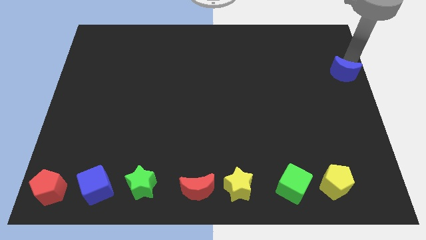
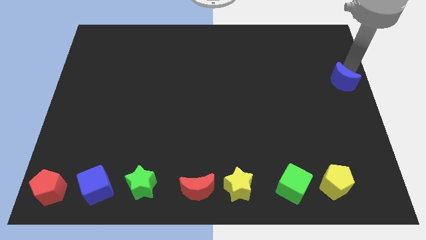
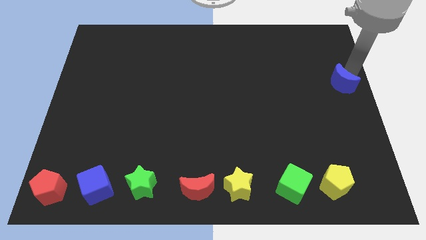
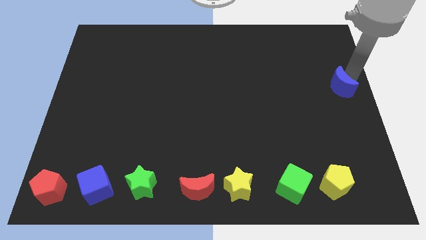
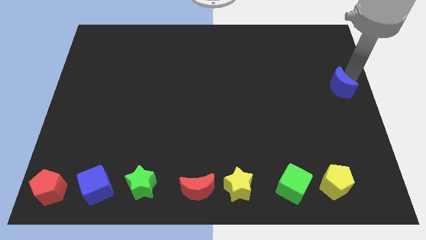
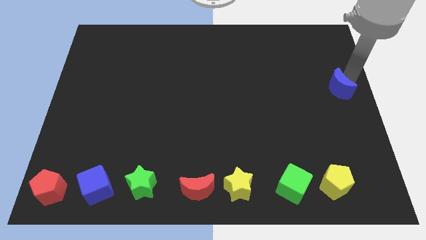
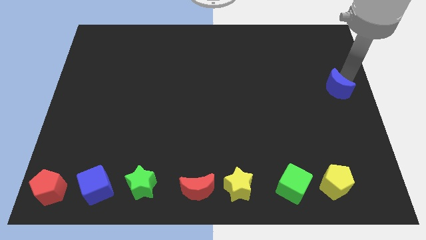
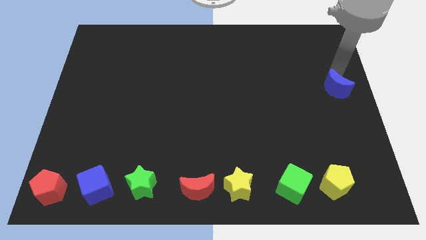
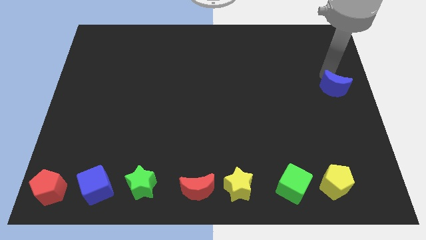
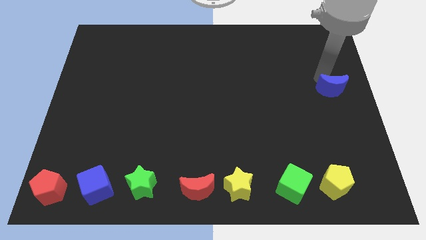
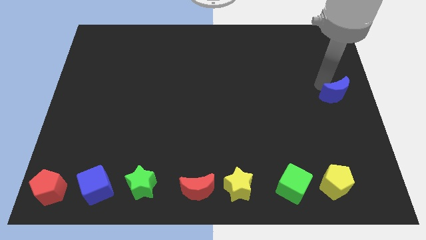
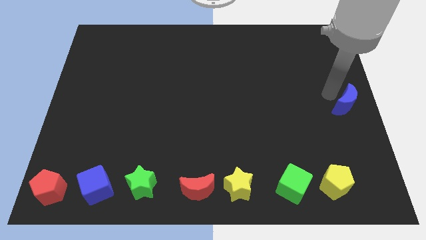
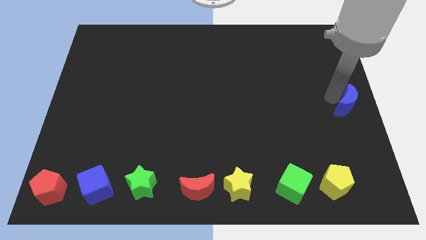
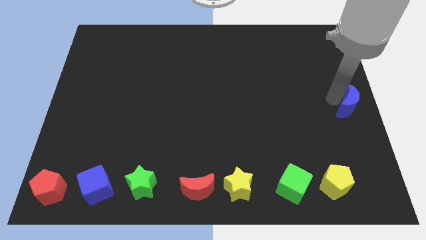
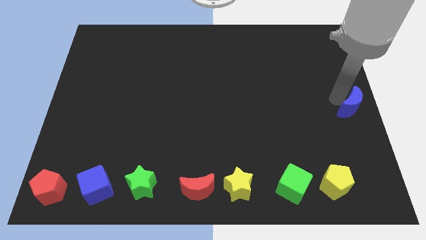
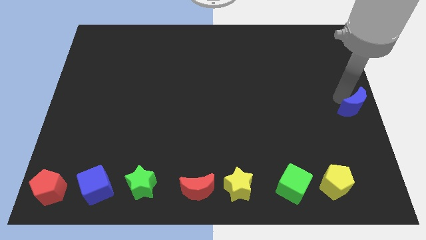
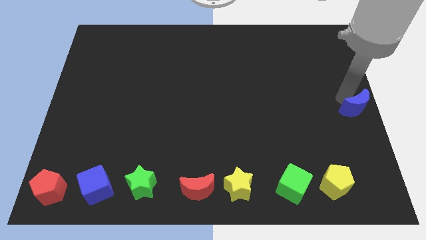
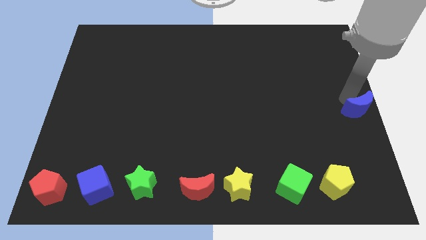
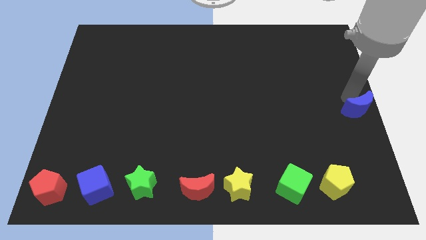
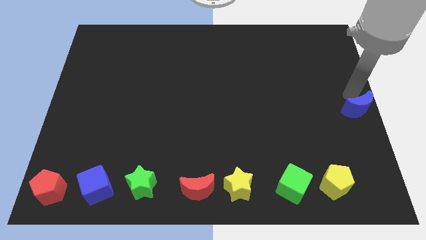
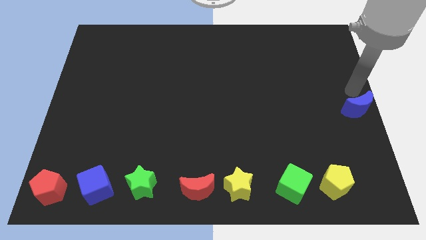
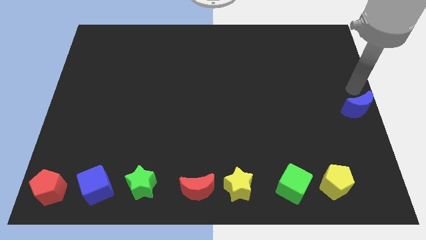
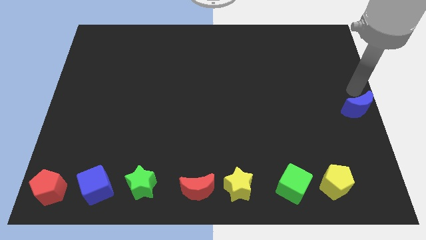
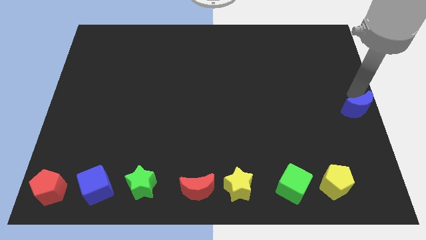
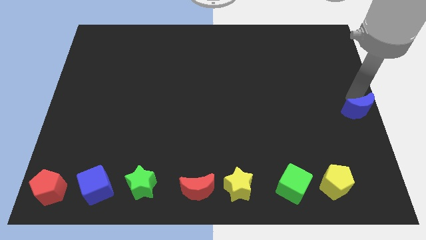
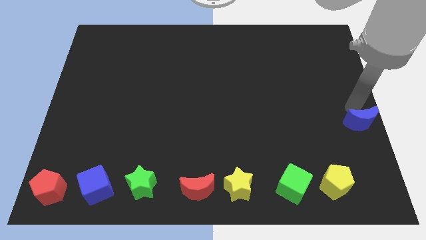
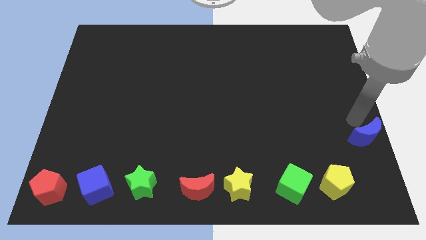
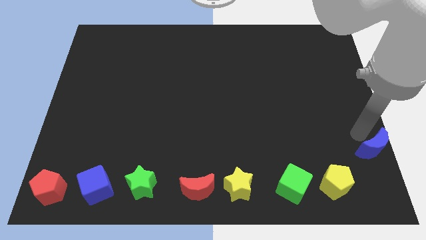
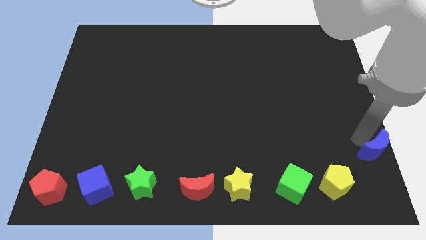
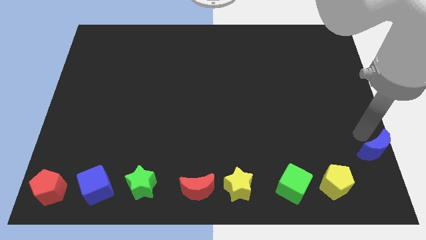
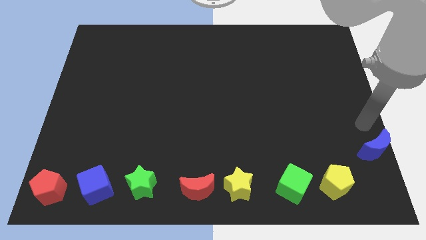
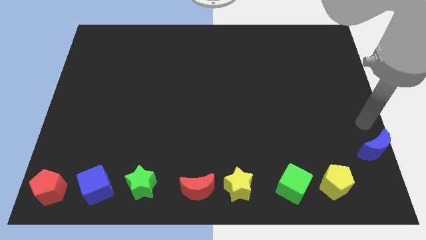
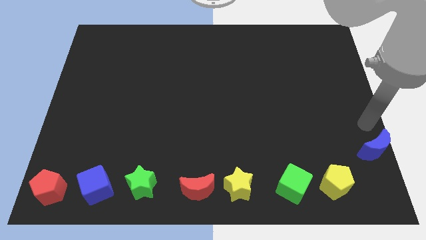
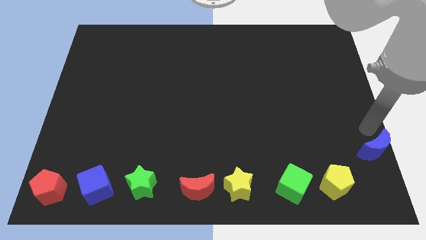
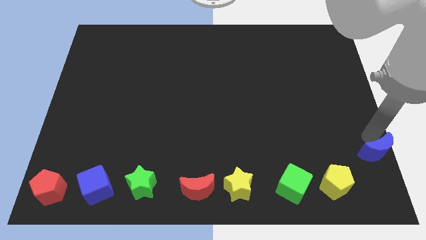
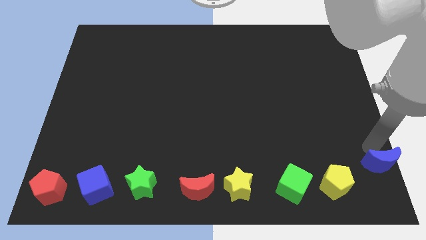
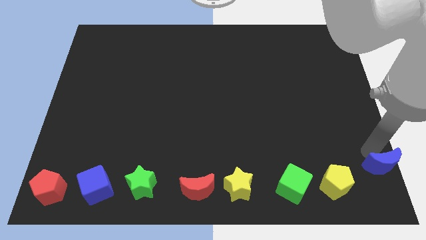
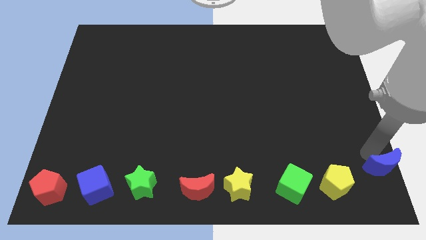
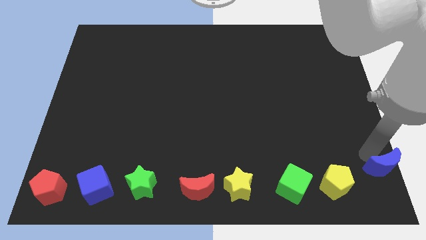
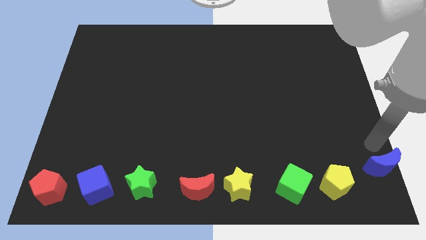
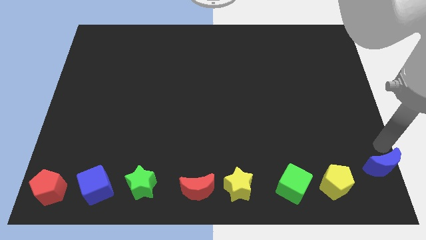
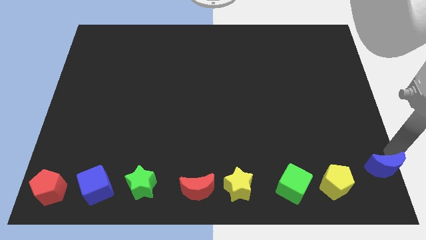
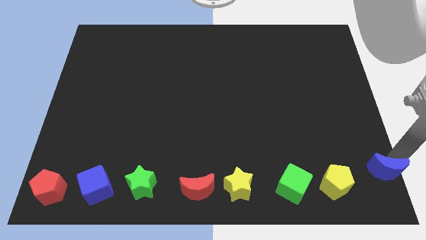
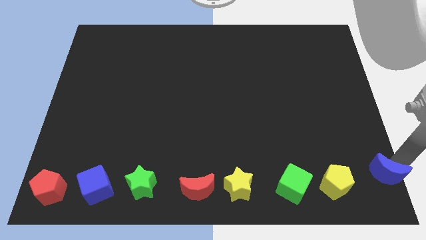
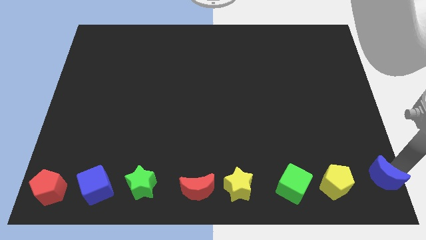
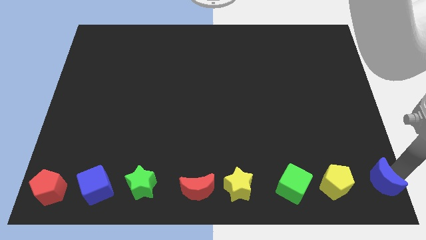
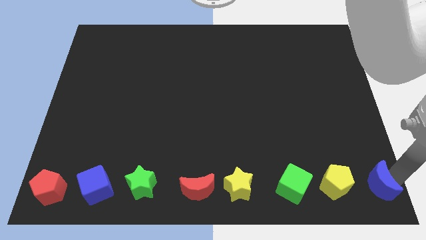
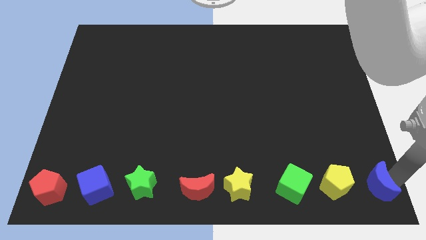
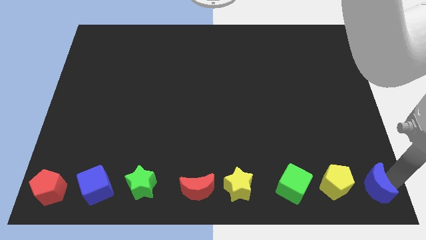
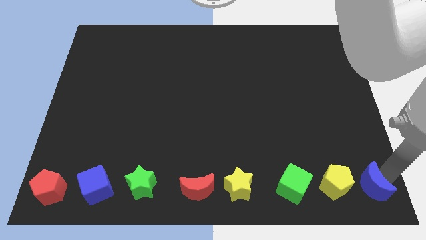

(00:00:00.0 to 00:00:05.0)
place blue crescent to the right of yellow pentagon

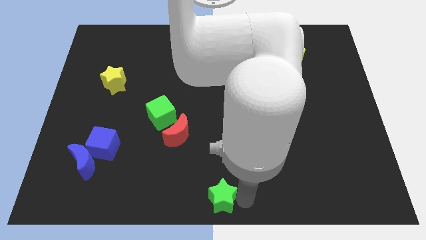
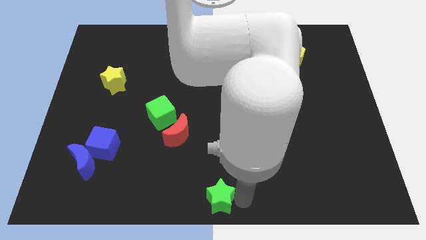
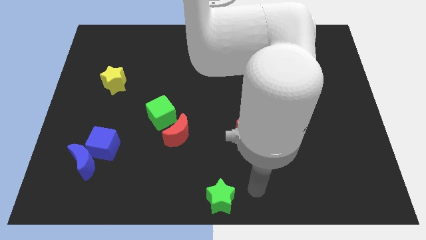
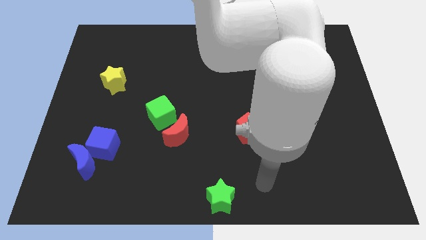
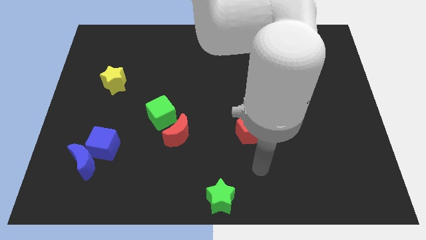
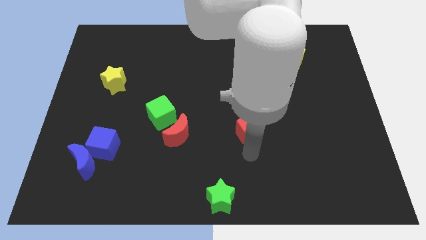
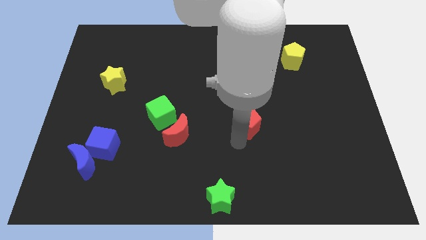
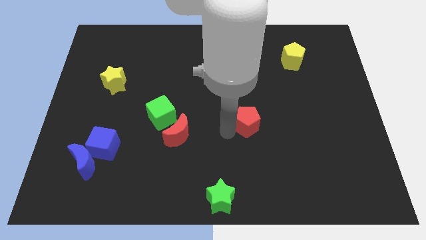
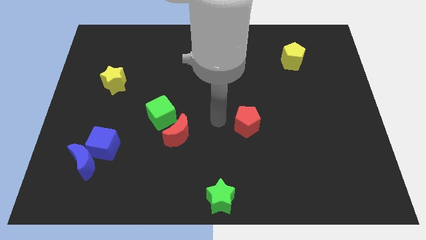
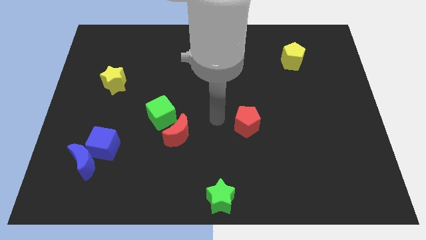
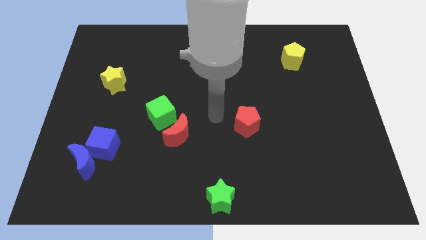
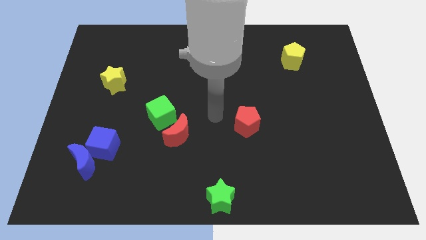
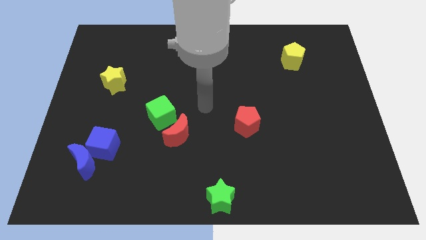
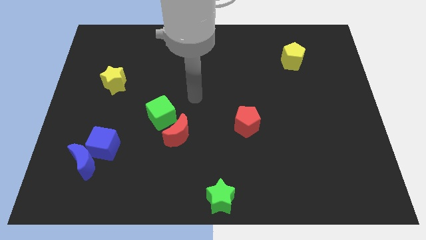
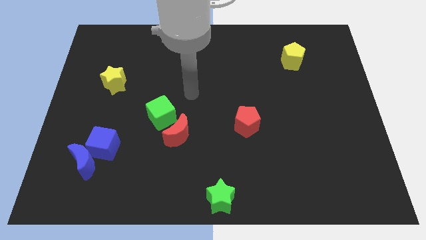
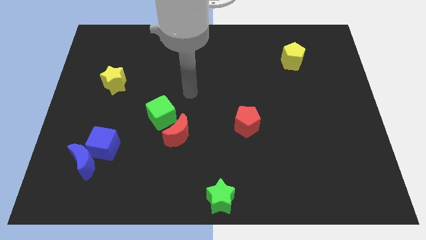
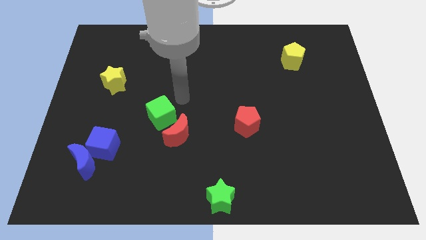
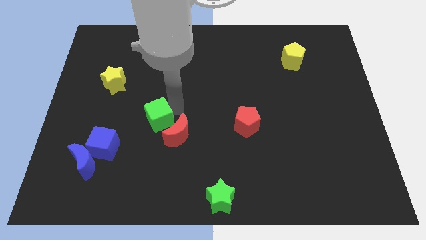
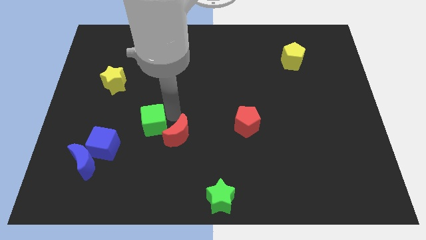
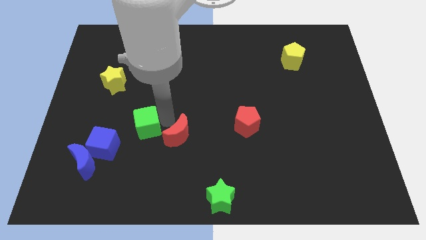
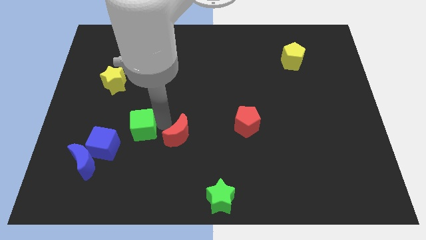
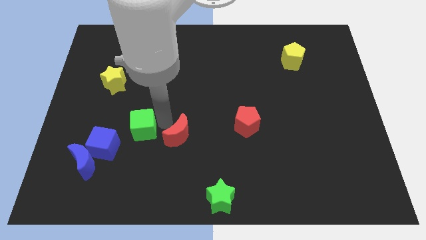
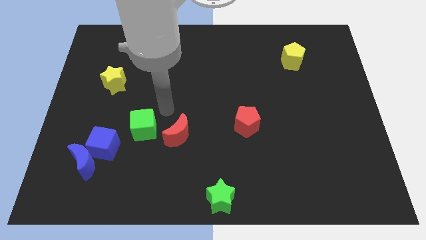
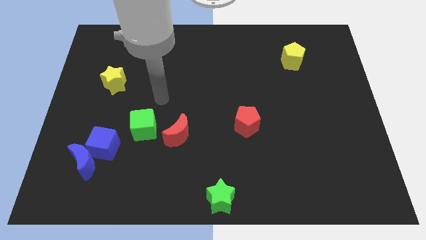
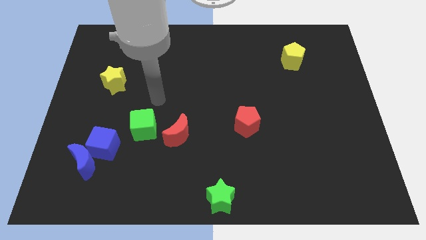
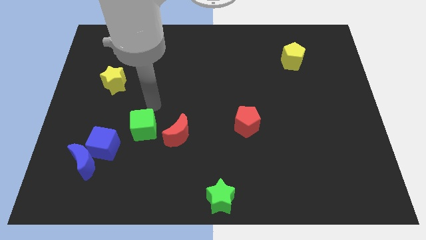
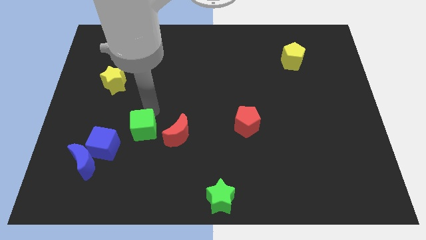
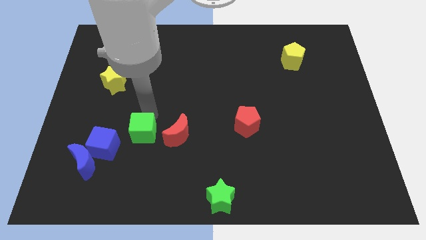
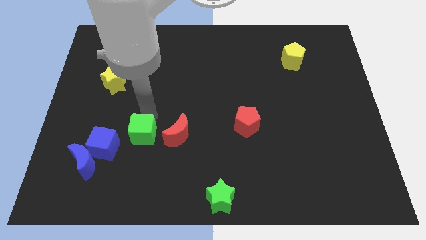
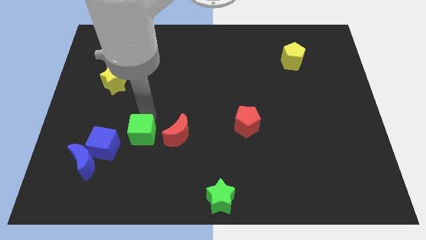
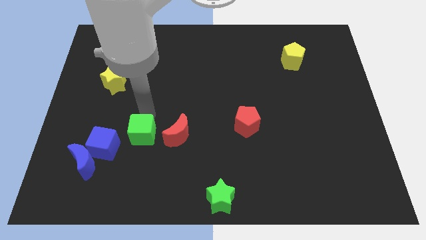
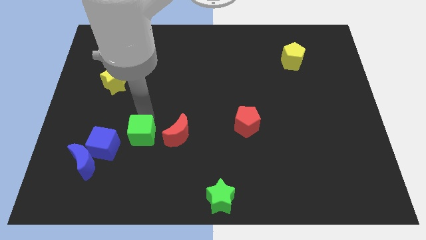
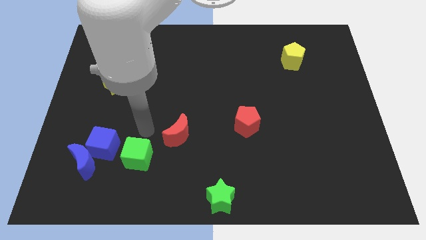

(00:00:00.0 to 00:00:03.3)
push the green cube to top right of blue cube

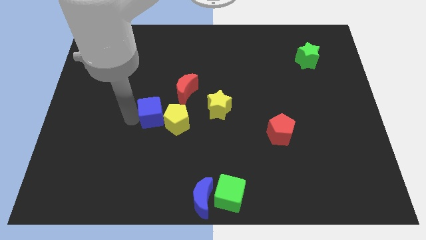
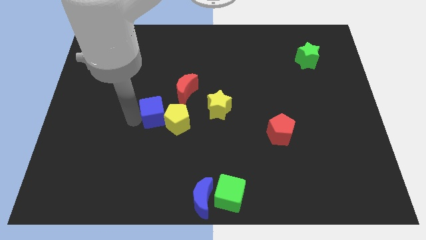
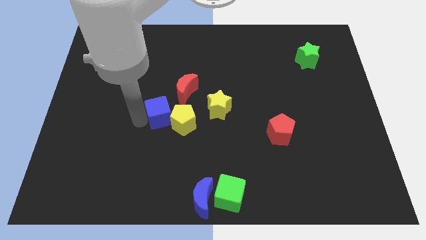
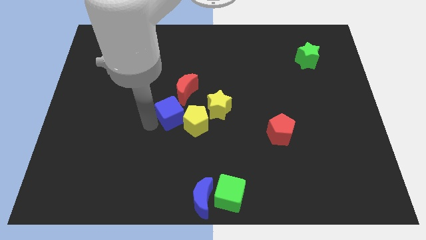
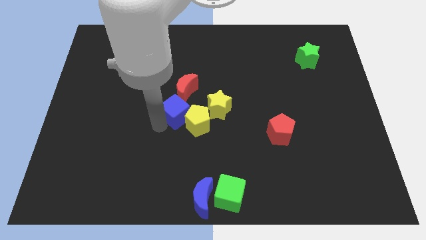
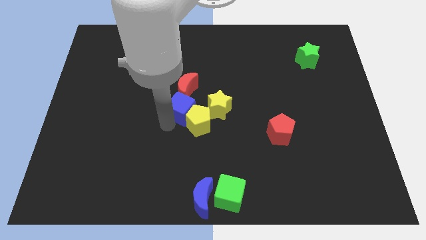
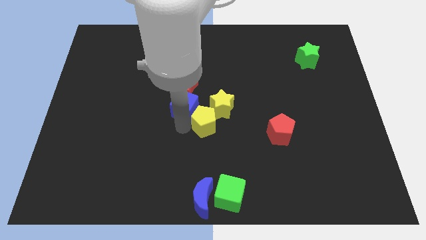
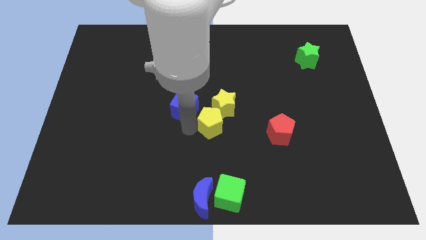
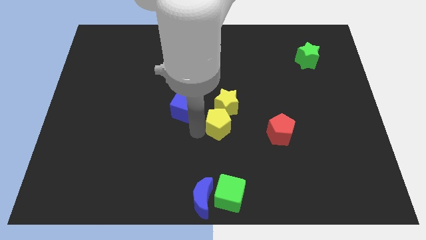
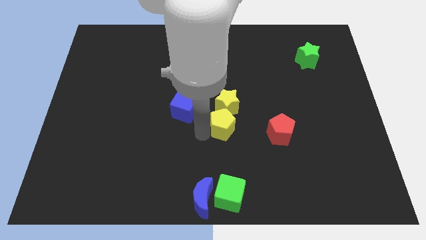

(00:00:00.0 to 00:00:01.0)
push yellow and blue blocks into the group of blocks
